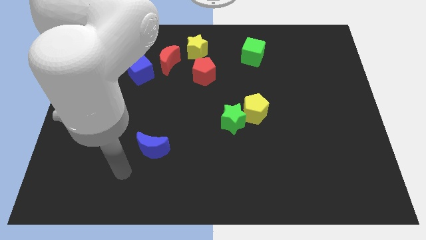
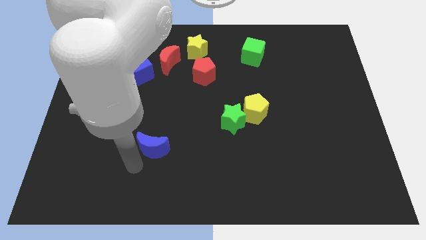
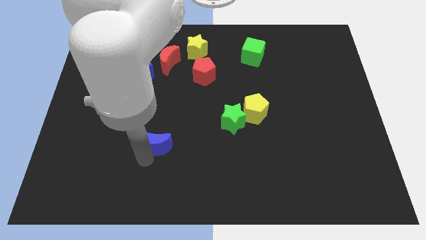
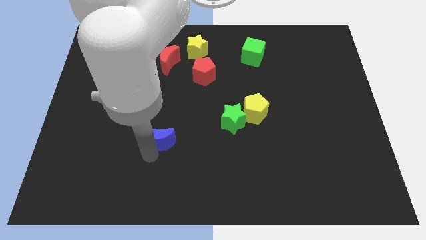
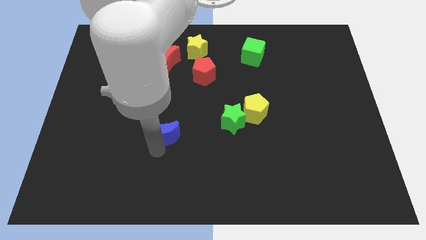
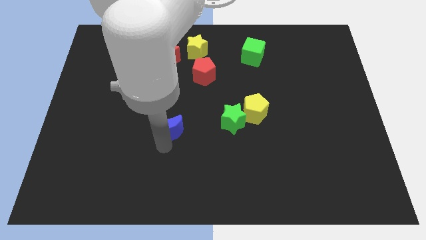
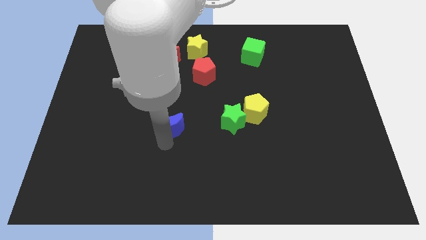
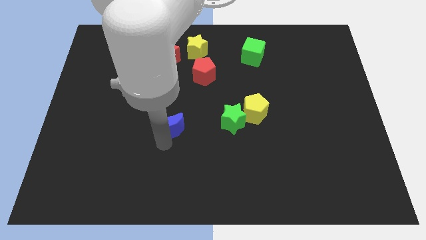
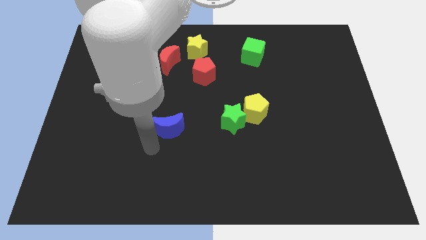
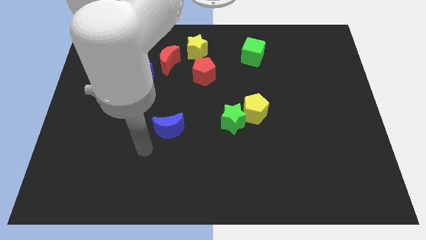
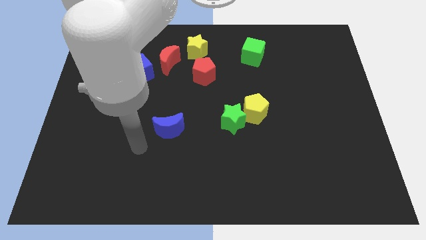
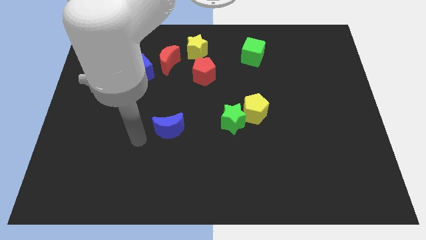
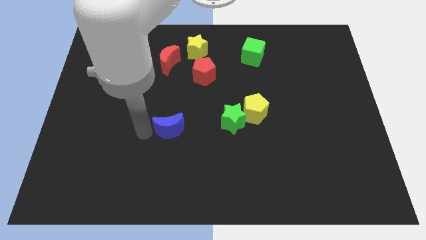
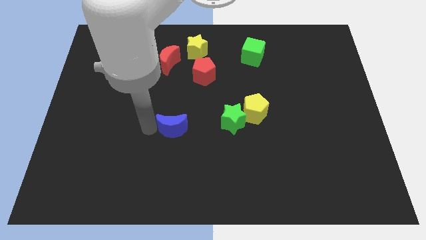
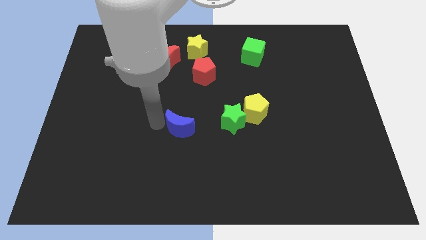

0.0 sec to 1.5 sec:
push the blue moon to the left of the green star

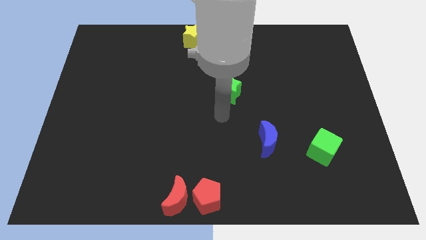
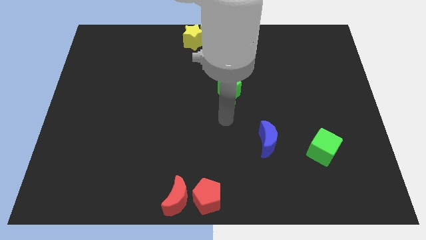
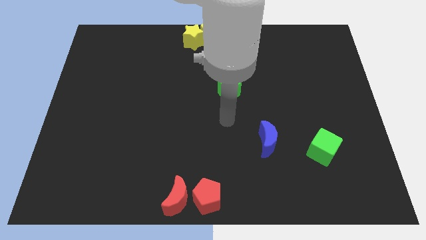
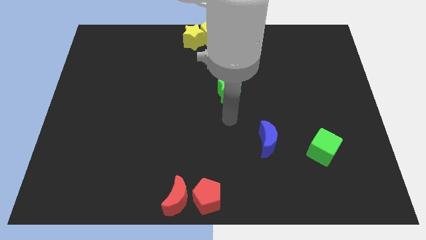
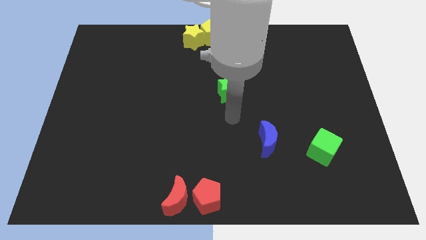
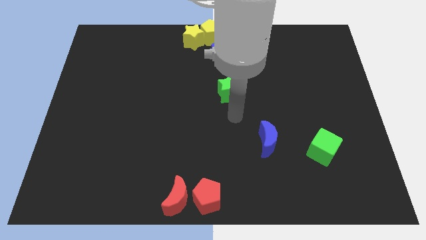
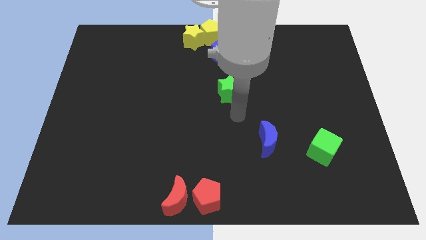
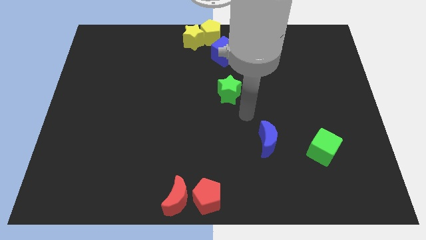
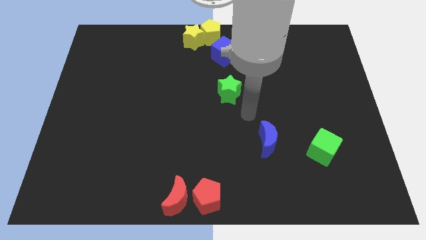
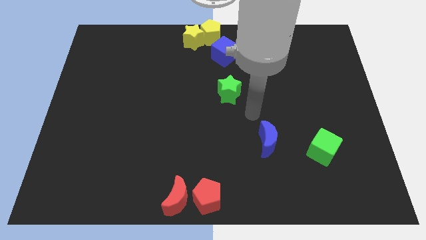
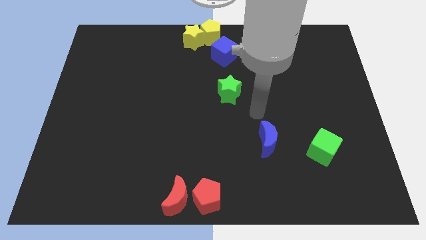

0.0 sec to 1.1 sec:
move your arm to the top of blue crescent

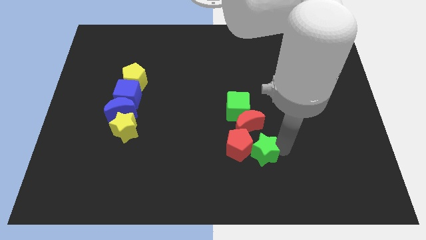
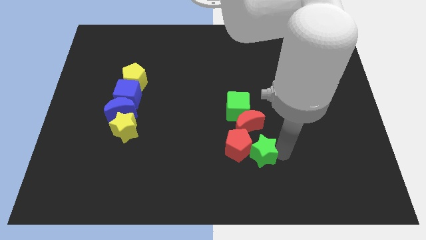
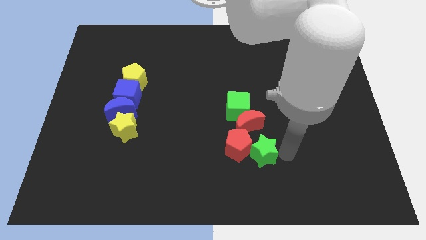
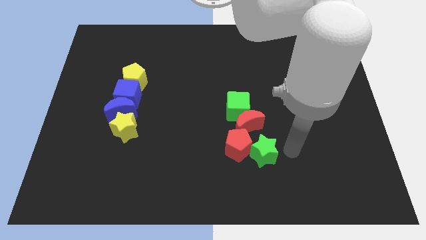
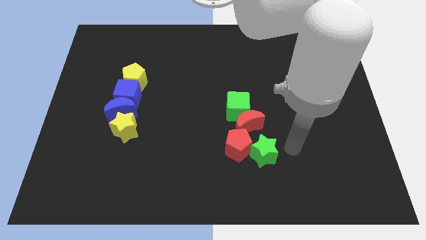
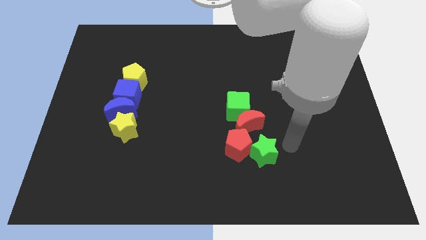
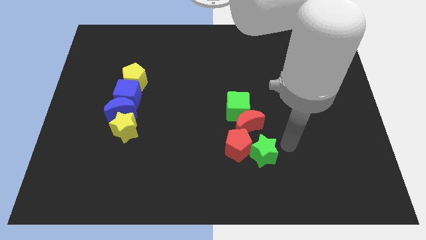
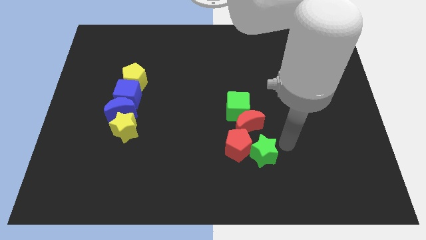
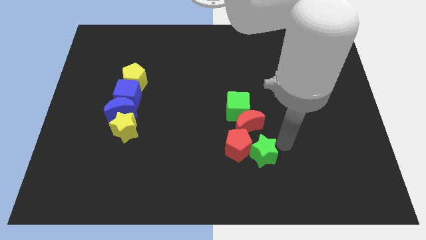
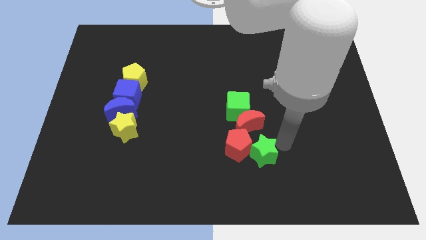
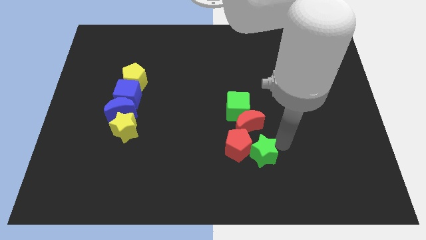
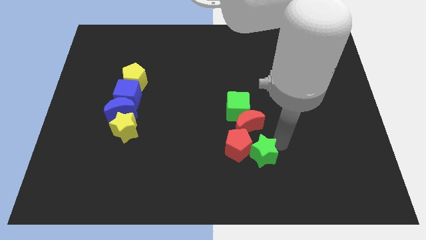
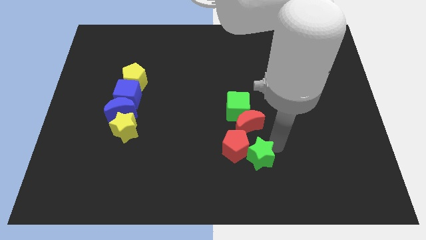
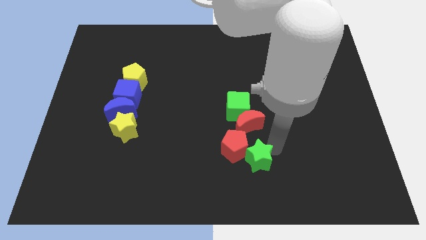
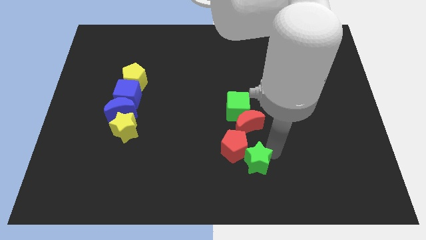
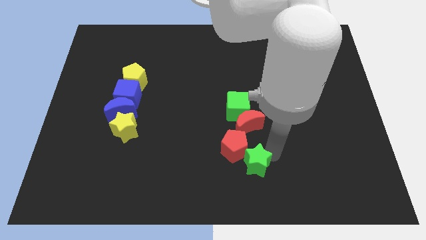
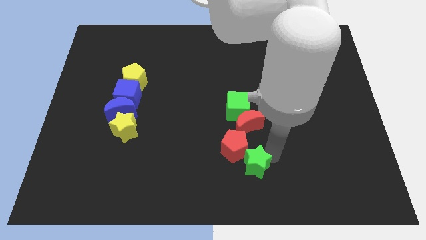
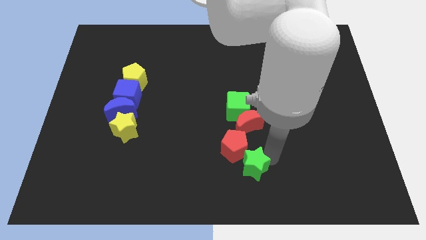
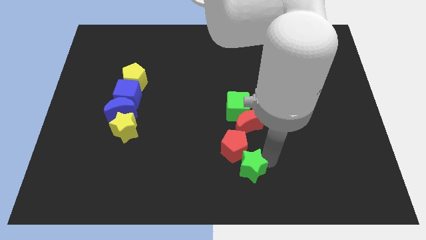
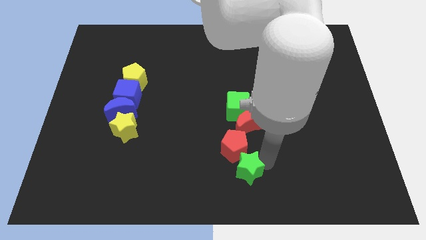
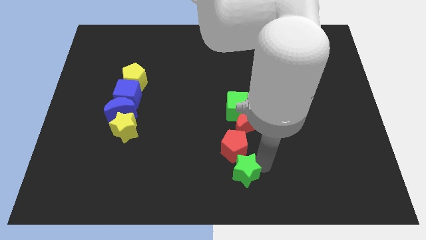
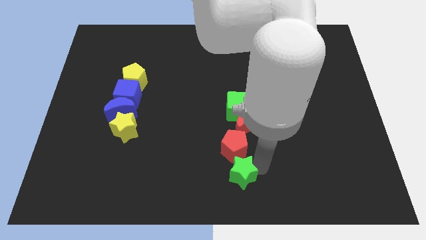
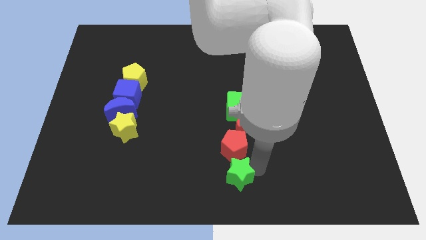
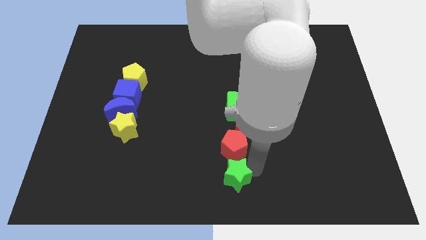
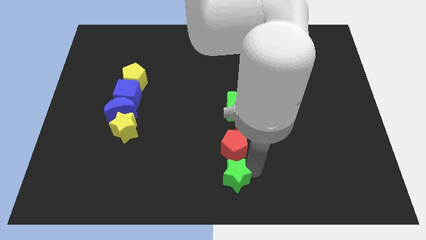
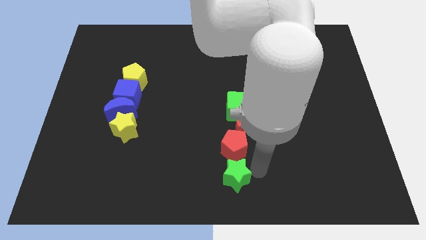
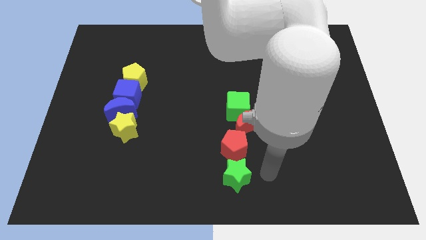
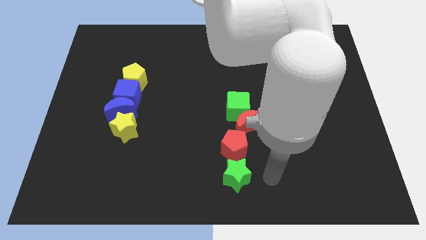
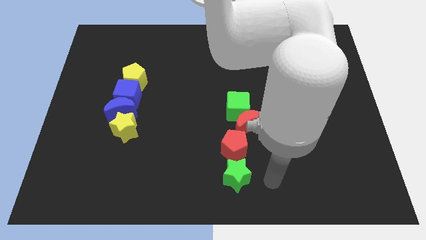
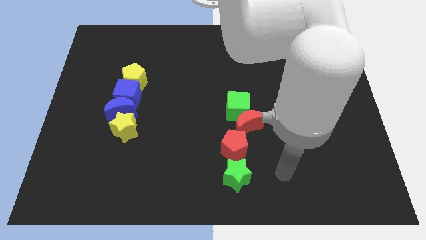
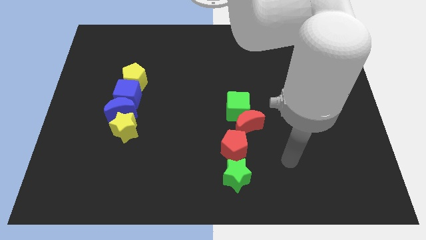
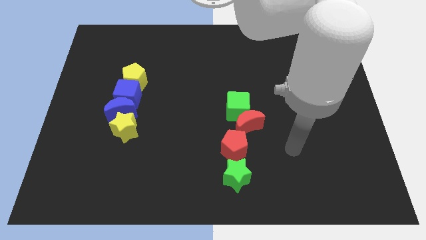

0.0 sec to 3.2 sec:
move the green star to the bottom of the red pentagon

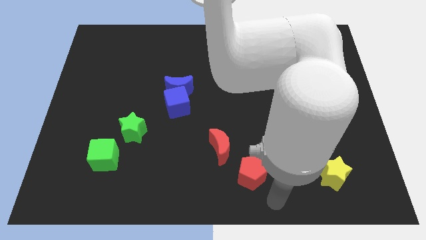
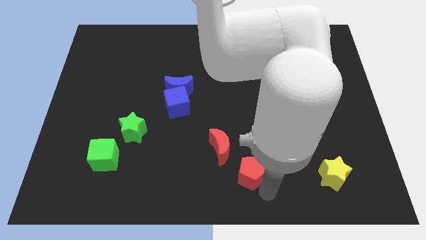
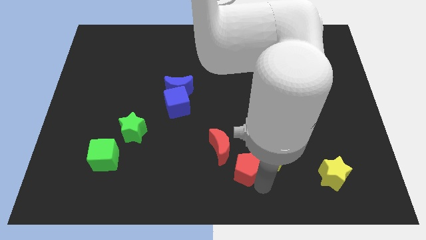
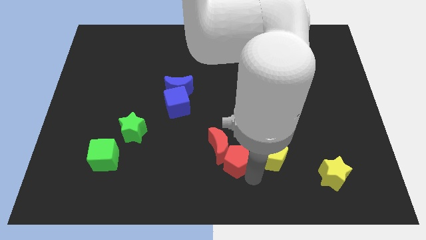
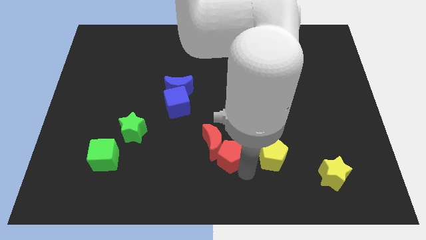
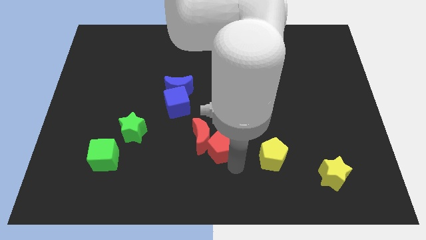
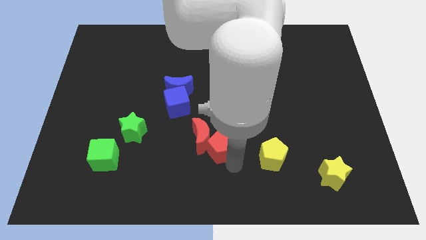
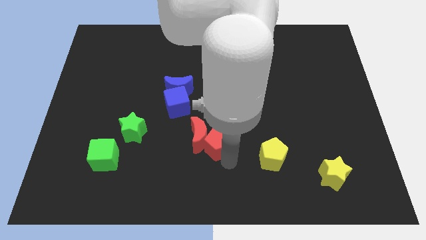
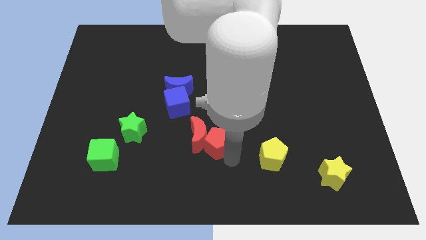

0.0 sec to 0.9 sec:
move the red pentagon along with the red crescent towards the blue cube

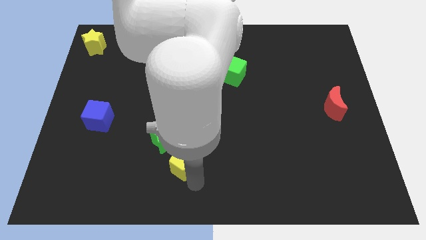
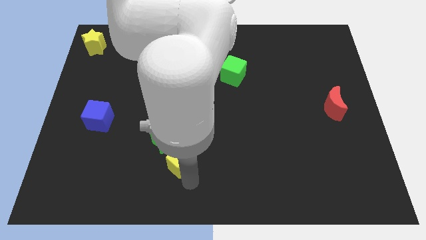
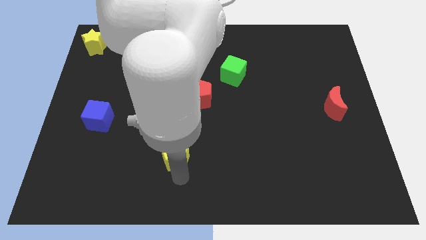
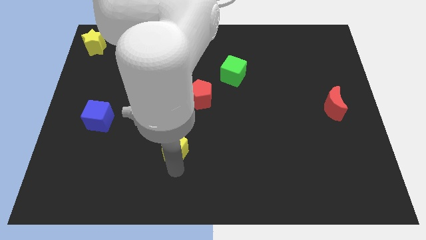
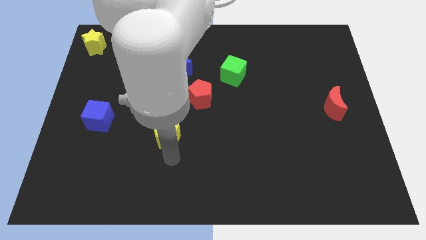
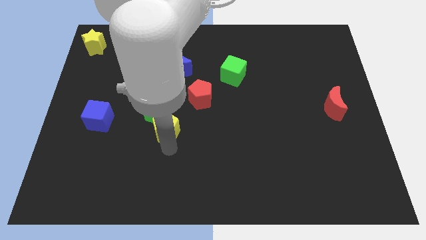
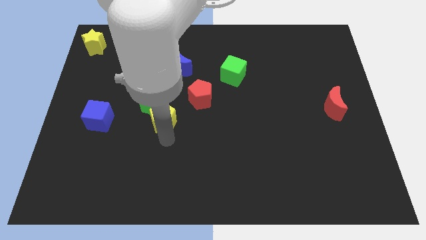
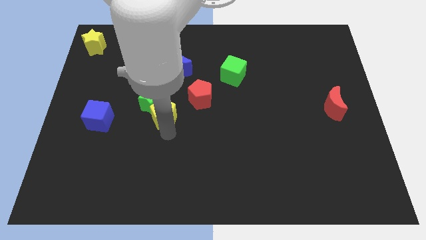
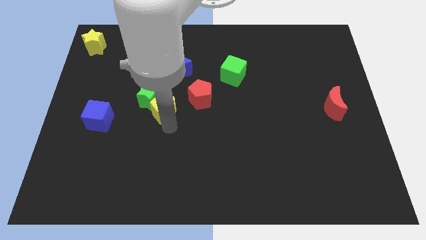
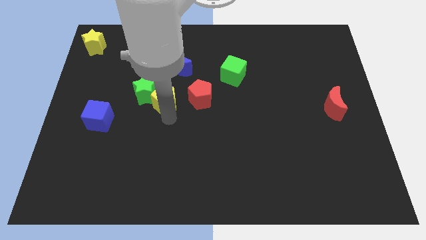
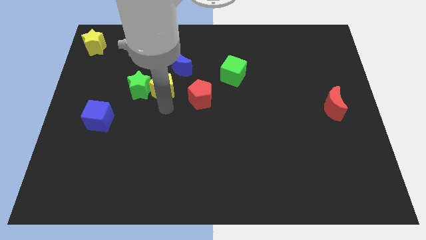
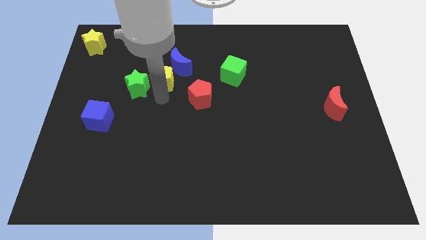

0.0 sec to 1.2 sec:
push the green star with the yellow pentagon towards the left center of the board

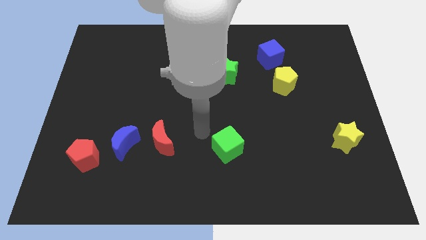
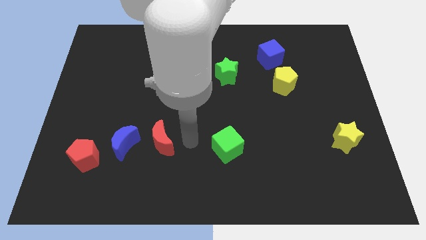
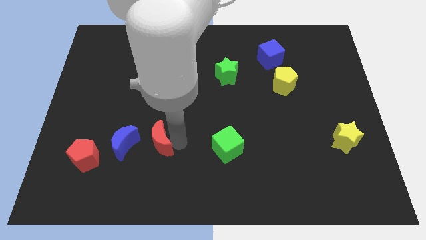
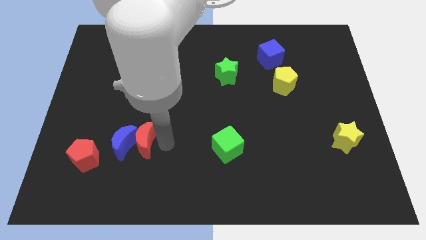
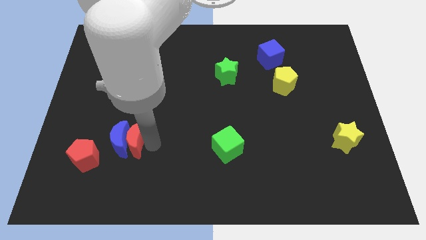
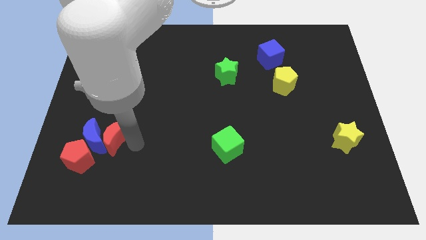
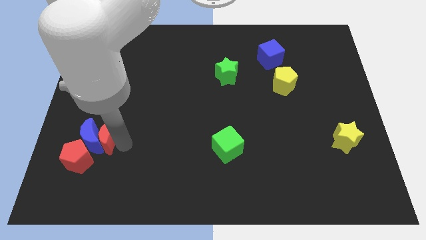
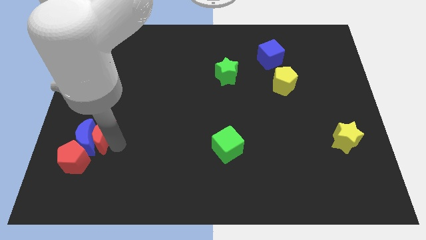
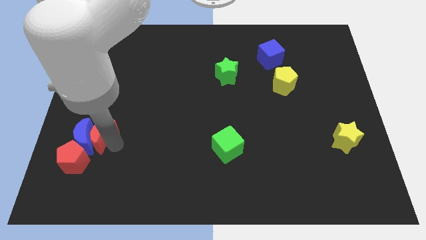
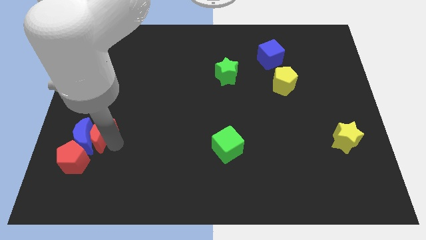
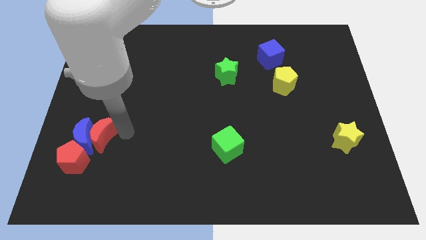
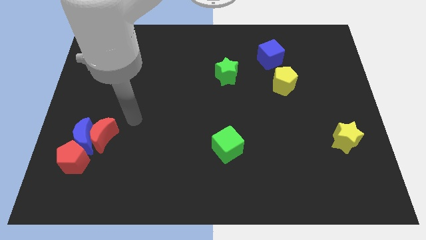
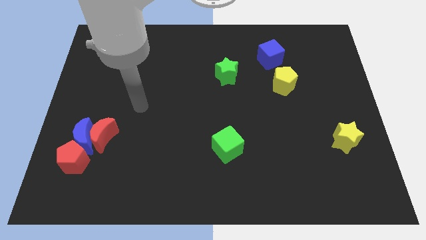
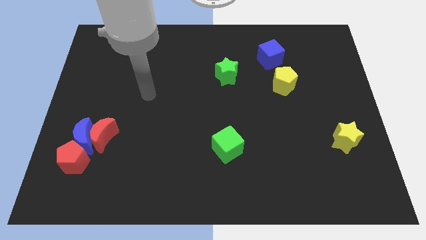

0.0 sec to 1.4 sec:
push both the crescent to the left side of the board along with the red pentagon
